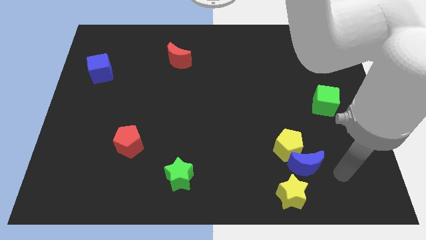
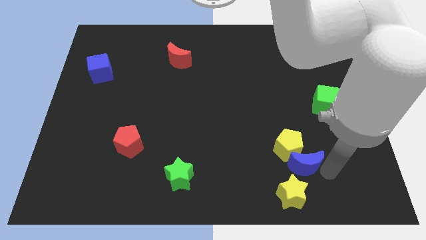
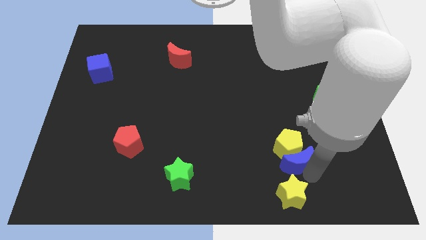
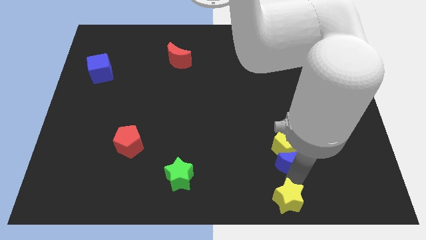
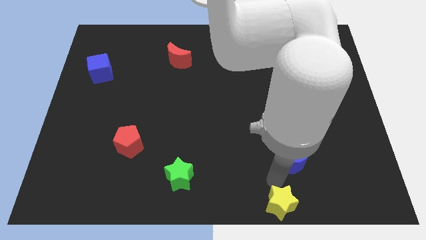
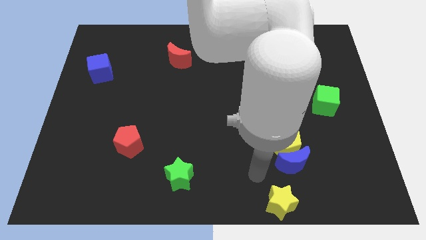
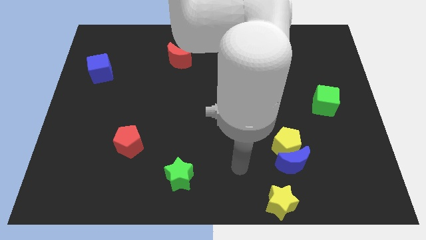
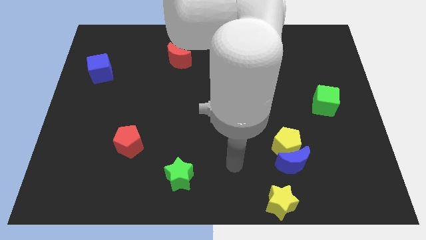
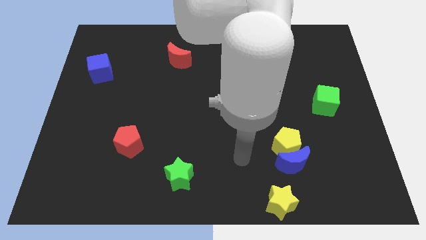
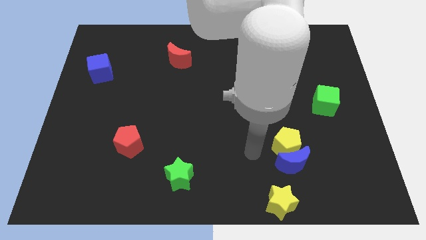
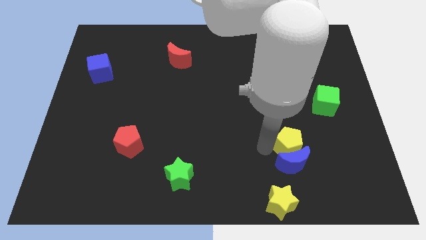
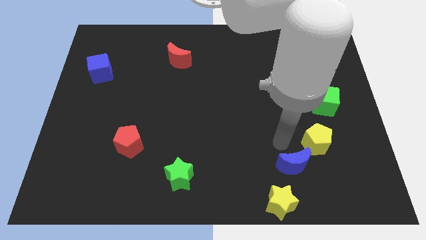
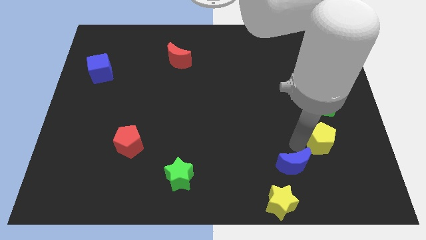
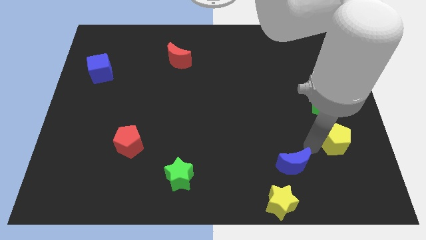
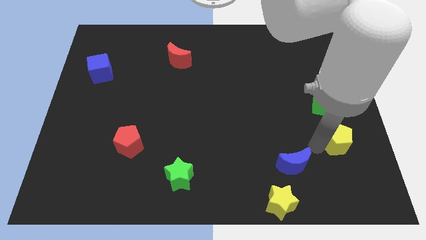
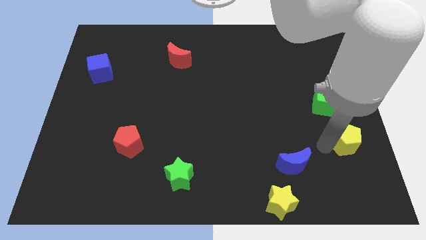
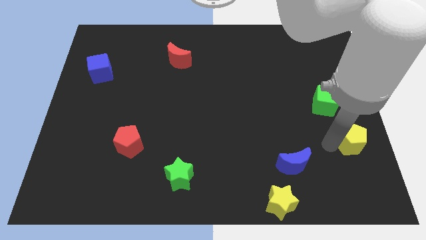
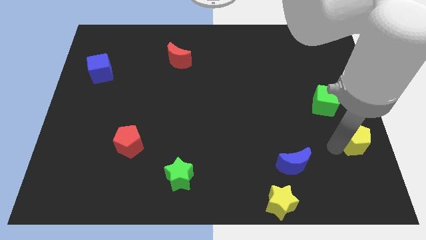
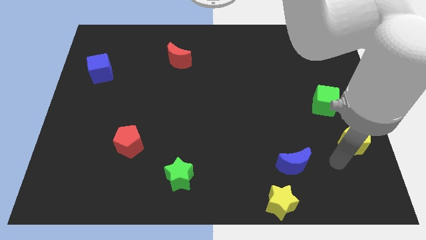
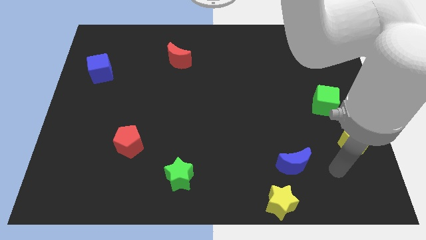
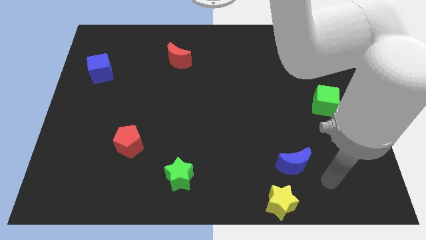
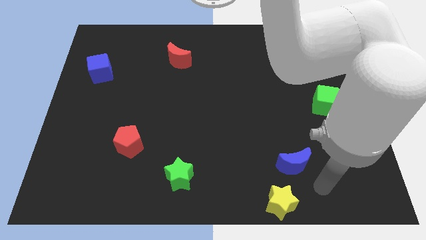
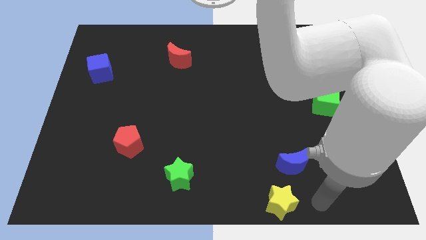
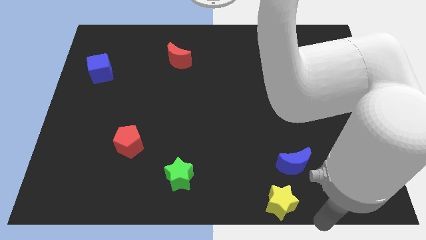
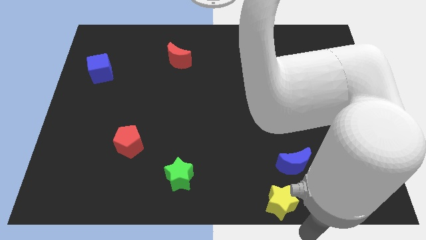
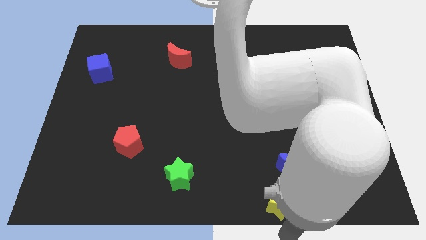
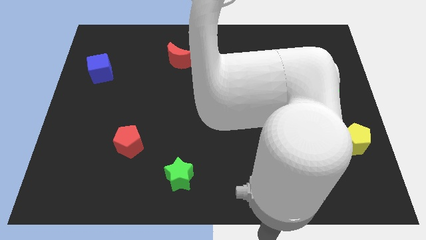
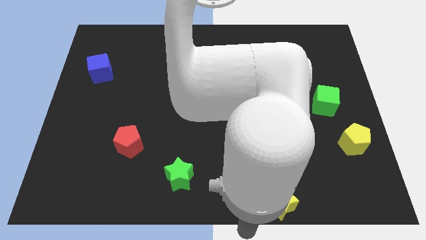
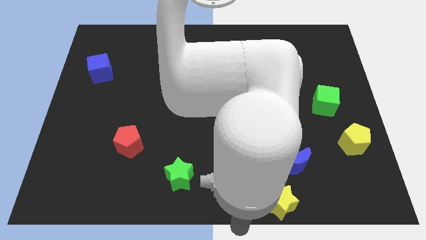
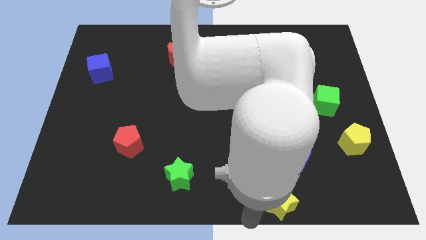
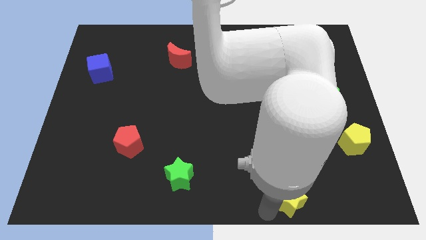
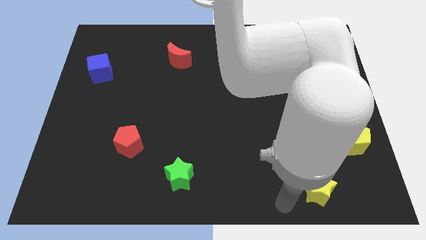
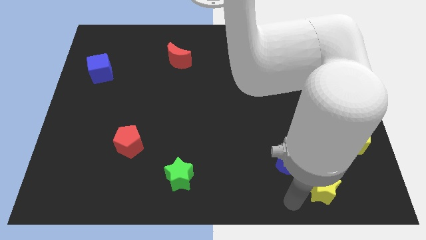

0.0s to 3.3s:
separate the yellow pentagon with the blue crescent

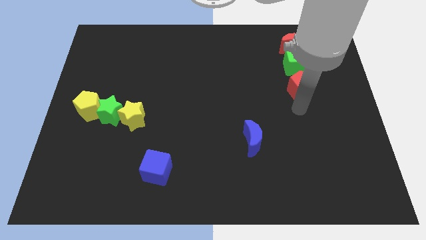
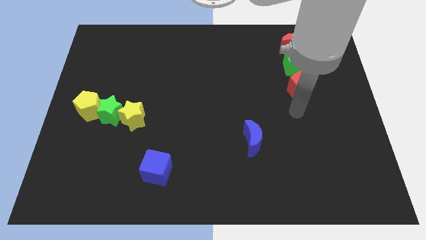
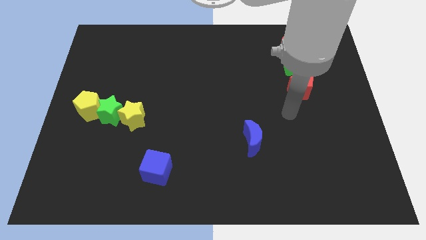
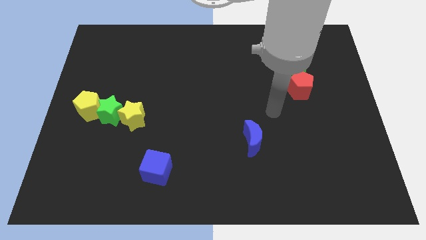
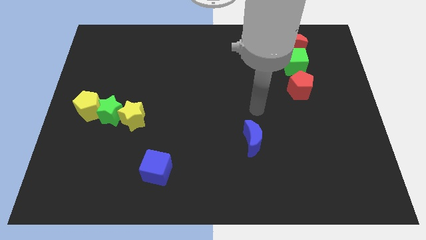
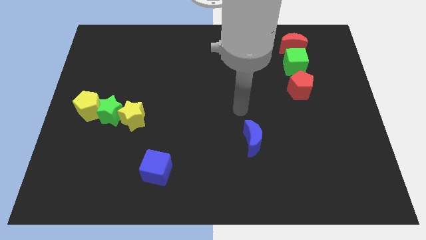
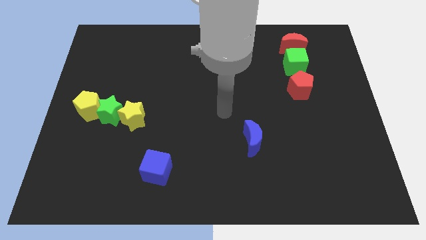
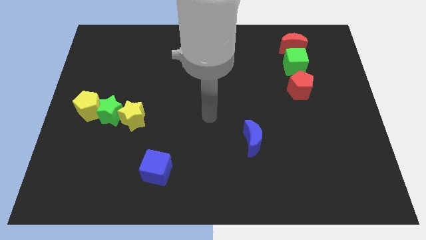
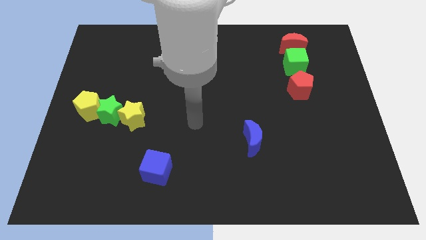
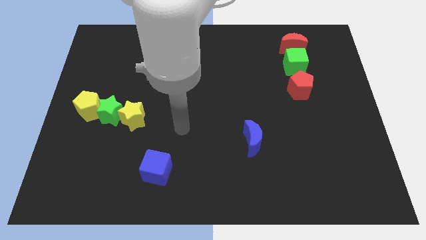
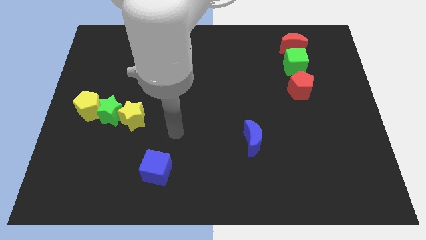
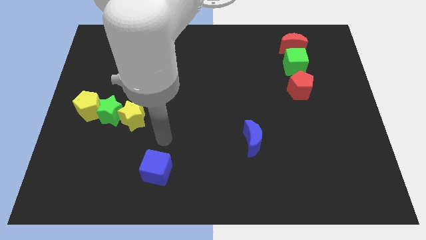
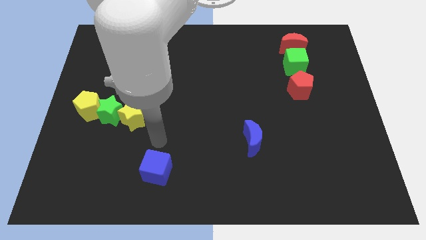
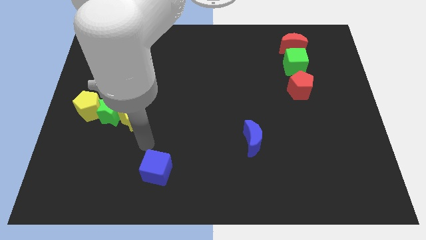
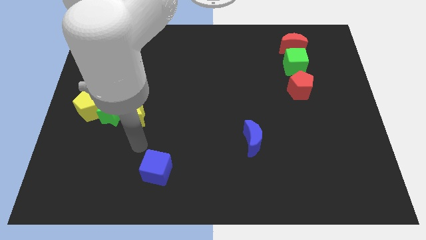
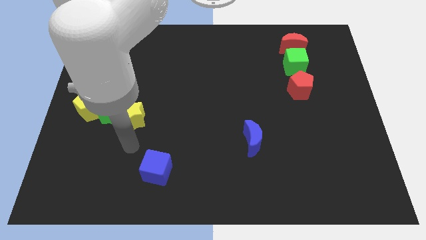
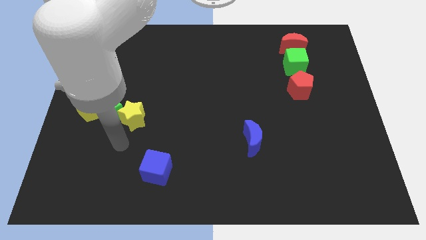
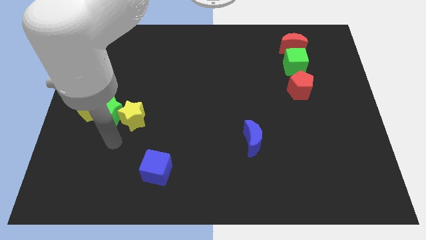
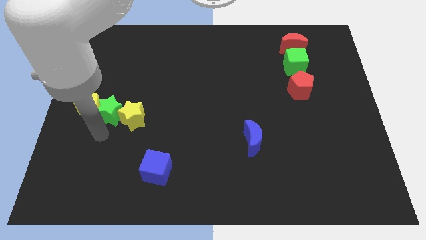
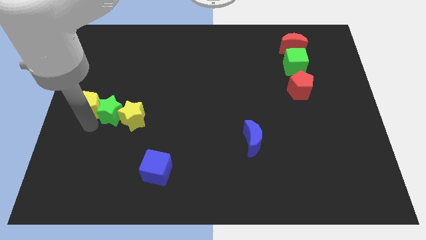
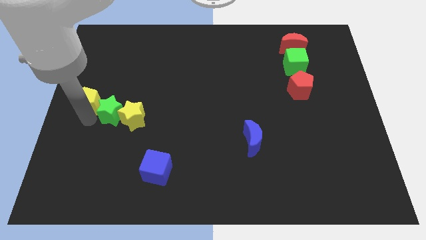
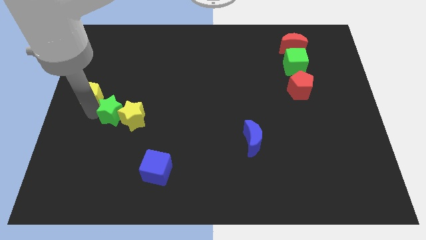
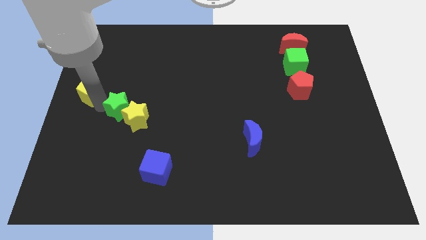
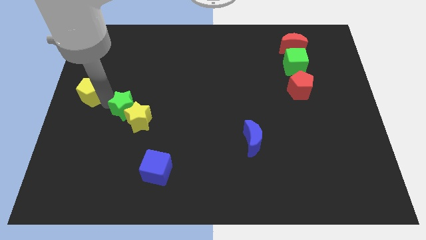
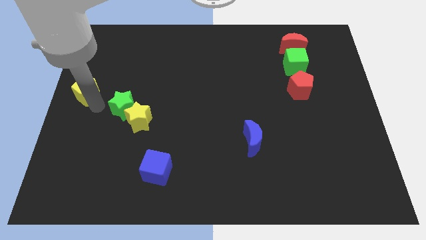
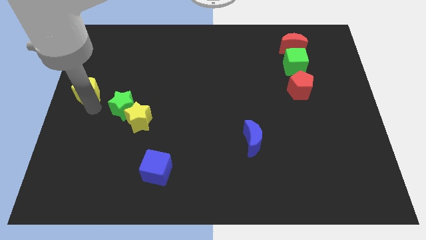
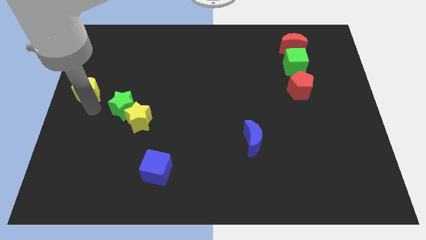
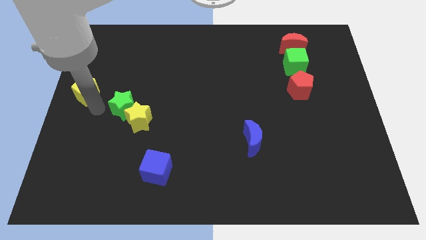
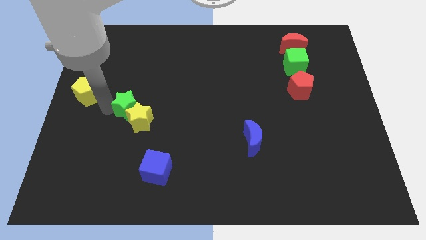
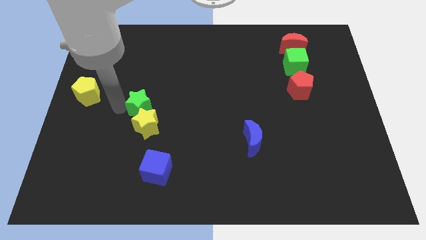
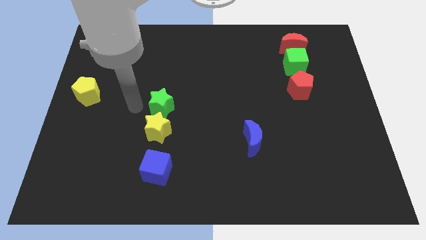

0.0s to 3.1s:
move the green and the yellow stars to the top of the blue cube

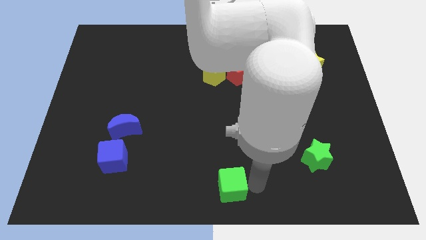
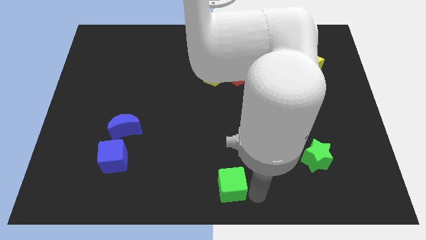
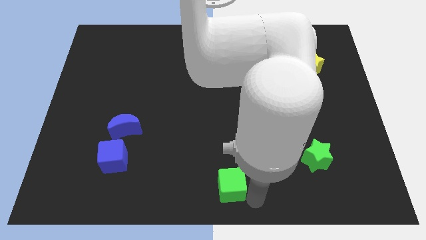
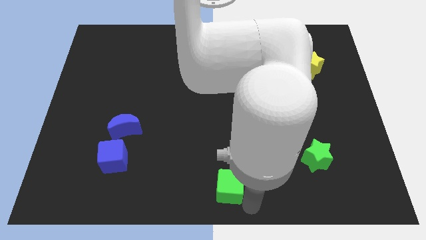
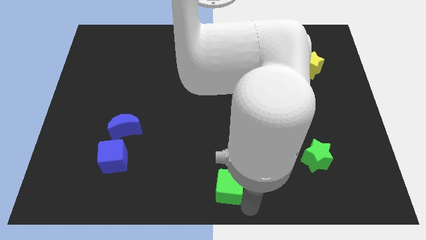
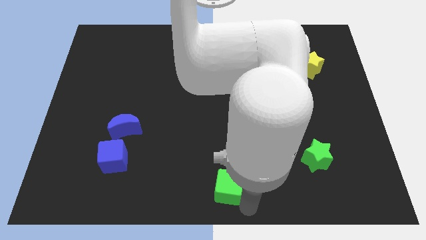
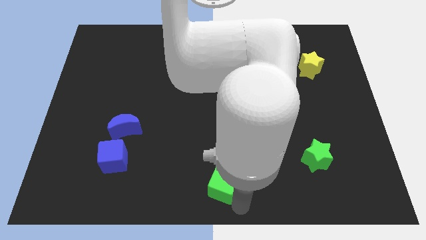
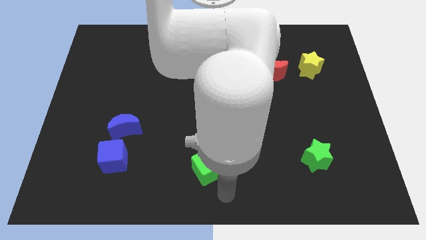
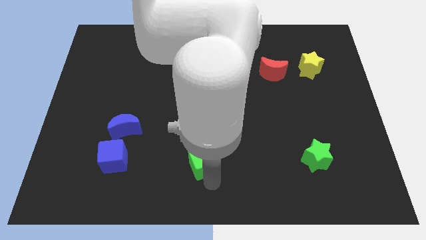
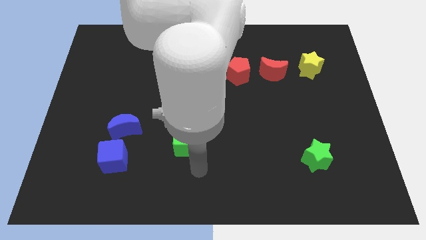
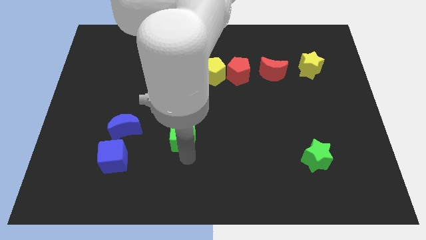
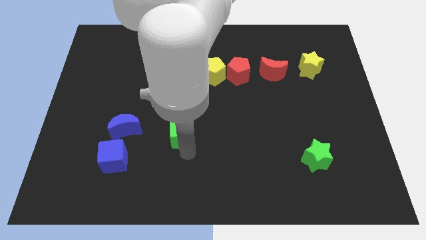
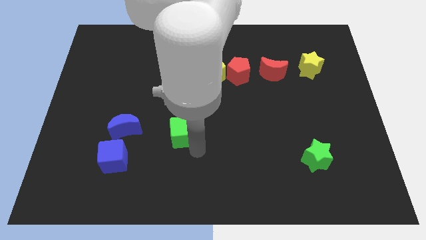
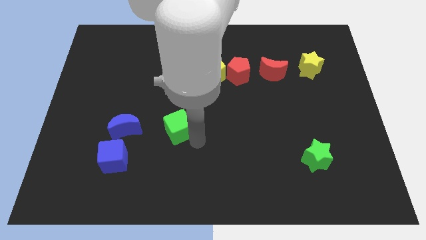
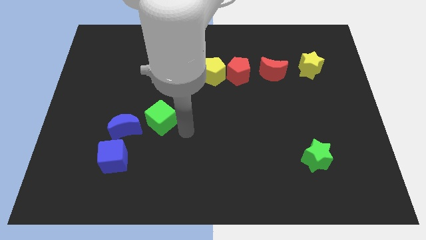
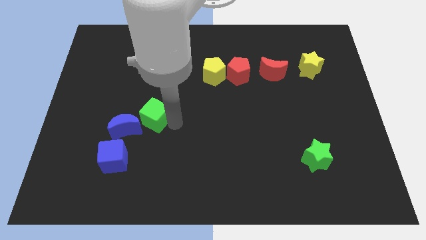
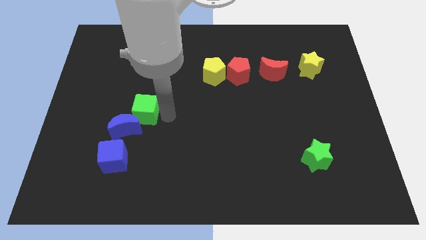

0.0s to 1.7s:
place the green cube above to the blue moon

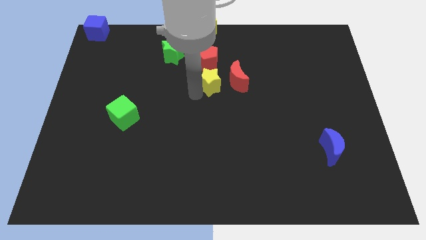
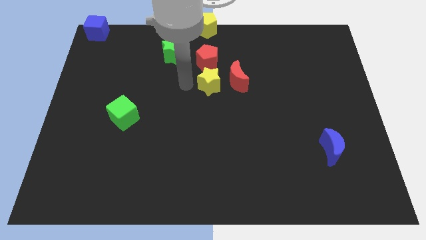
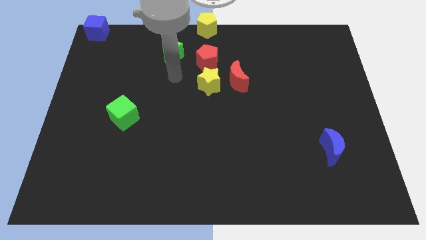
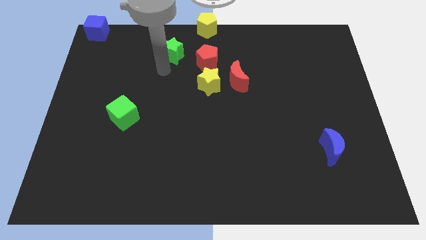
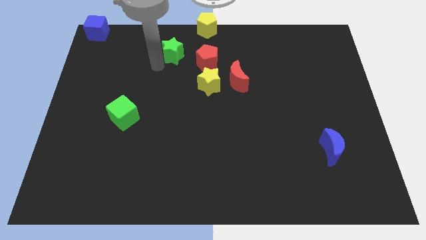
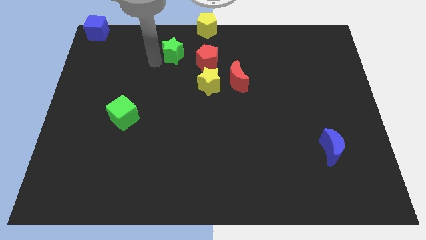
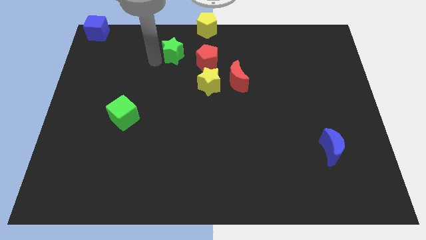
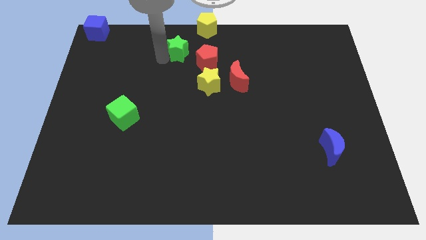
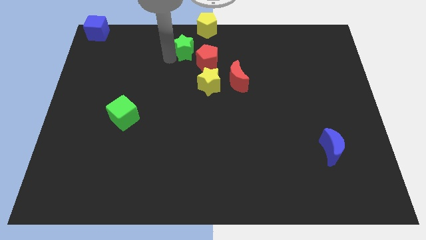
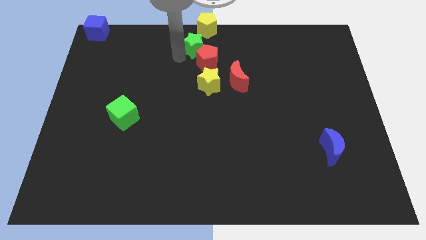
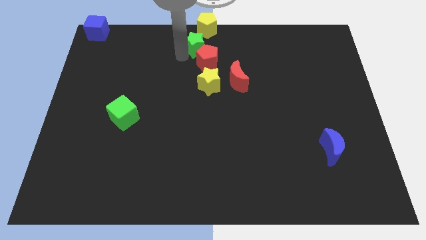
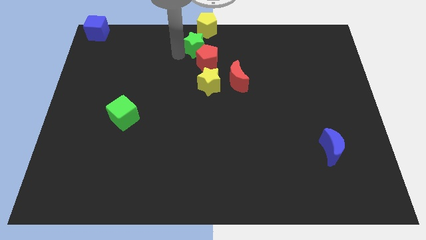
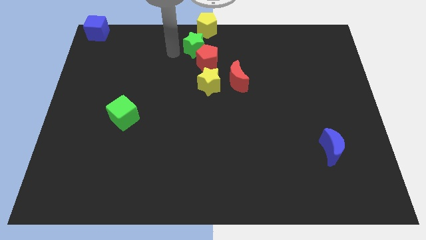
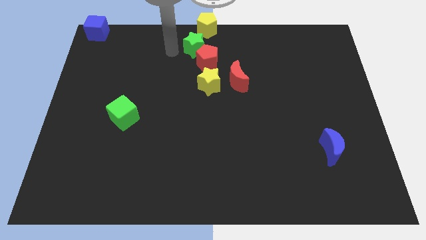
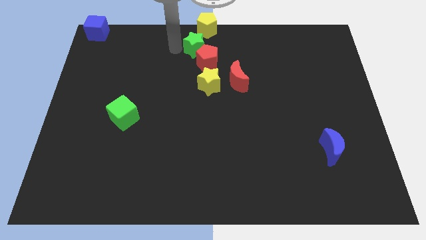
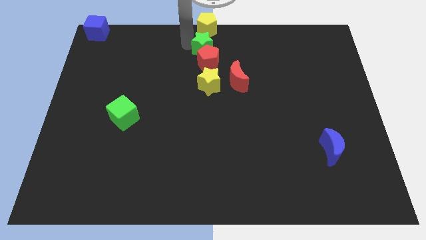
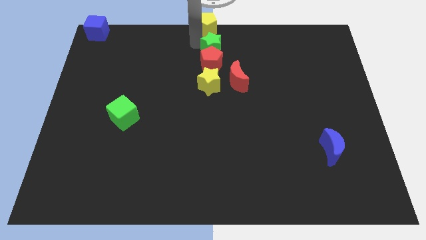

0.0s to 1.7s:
put the green star above the red pentagon
